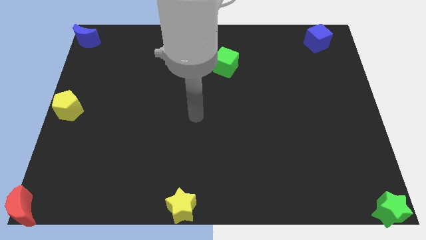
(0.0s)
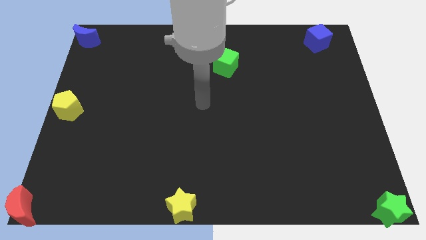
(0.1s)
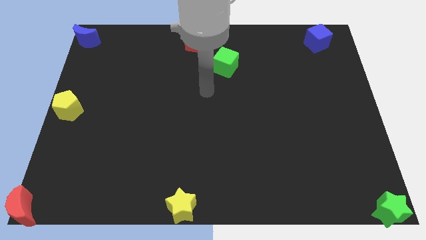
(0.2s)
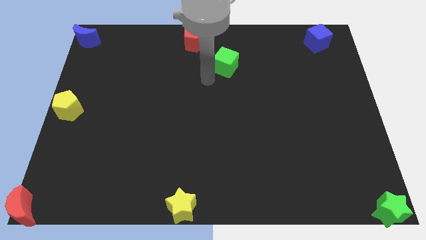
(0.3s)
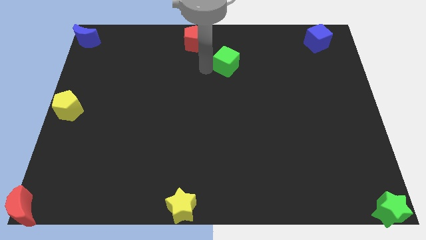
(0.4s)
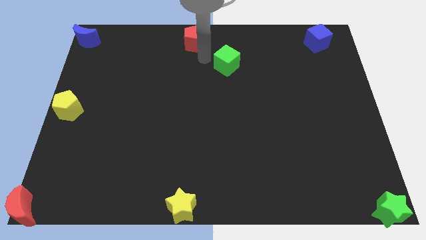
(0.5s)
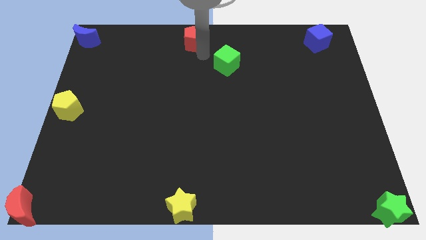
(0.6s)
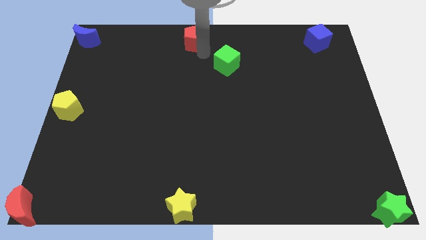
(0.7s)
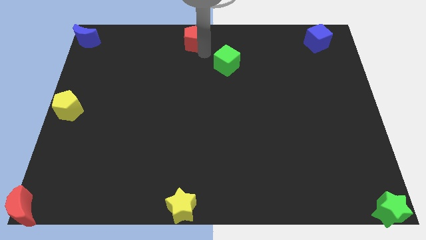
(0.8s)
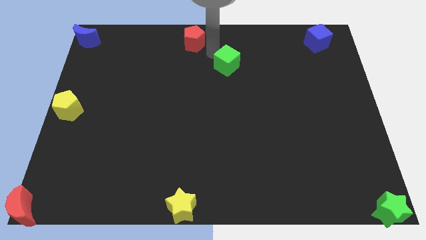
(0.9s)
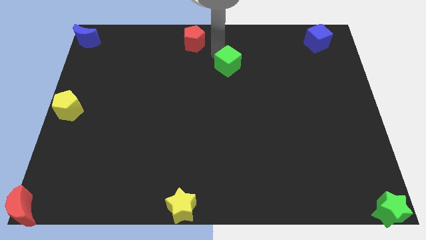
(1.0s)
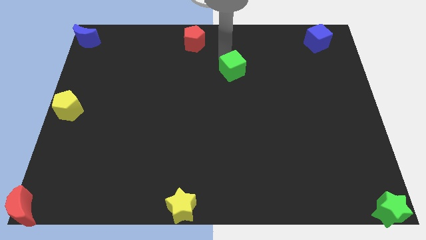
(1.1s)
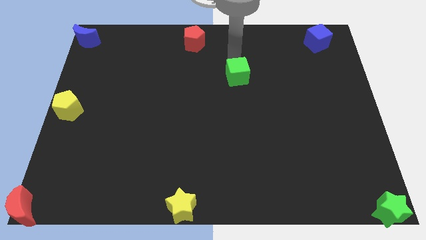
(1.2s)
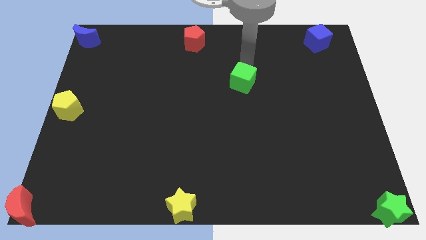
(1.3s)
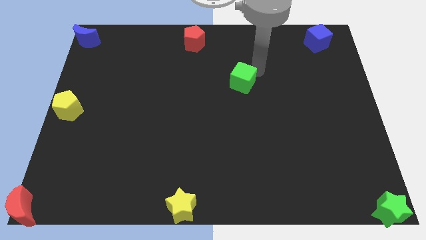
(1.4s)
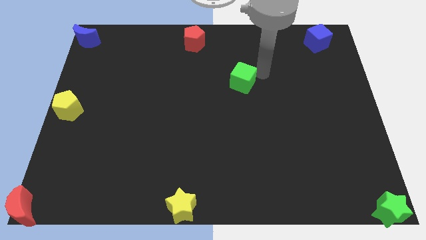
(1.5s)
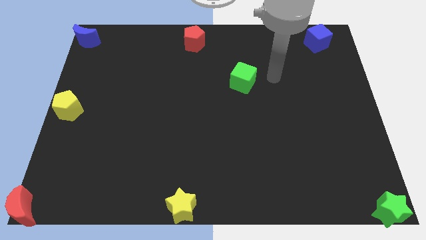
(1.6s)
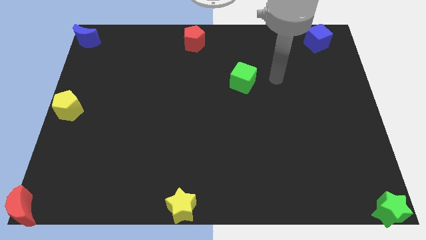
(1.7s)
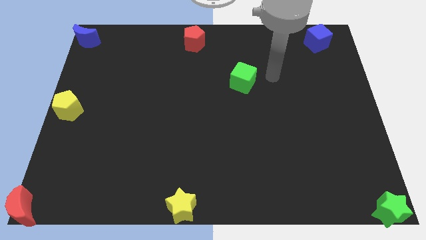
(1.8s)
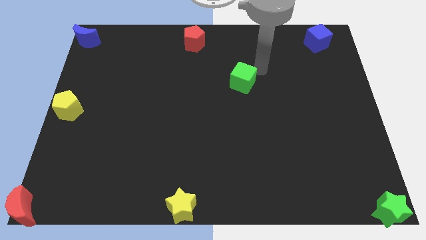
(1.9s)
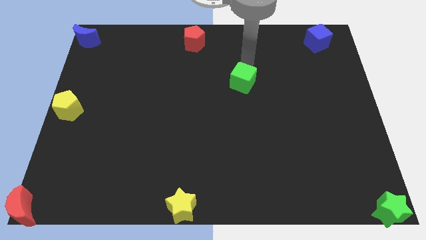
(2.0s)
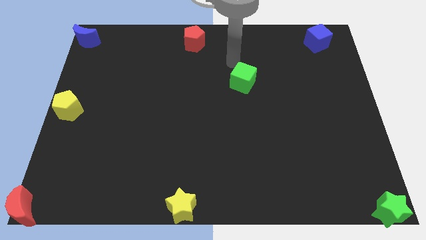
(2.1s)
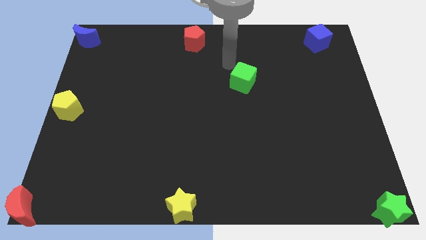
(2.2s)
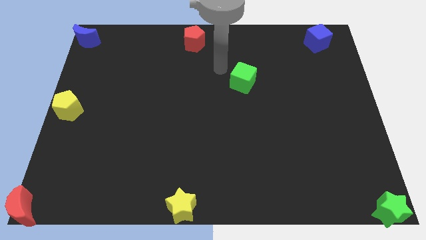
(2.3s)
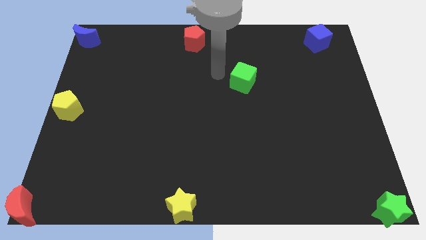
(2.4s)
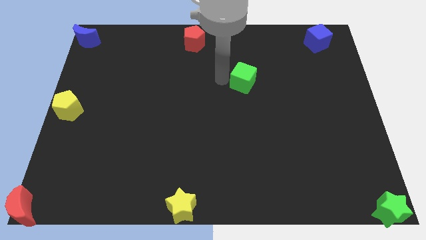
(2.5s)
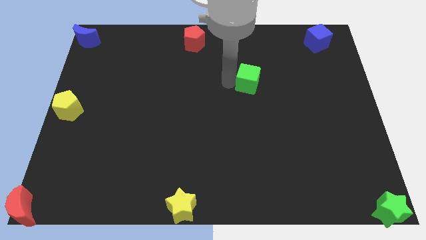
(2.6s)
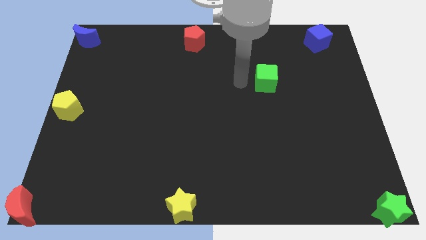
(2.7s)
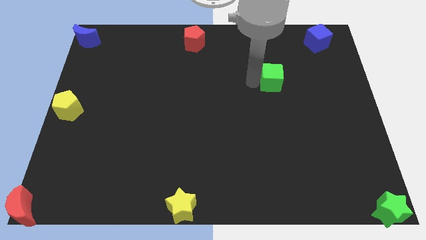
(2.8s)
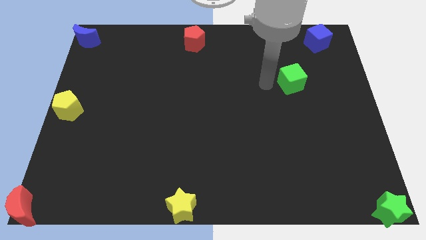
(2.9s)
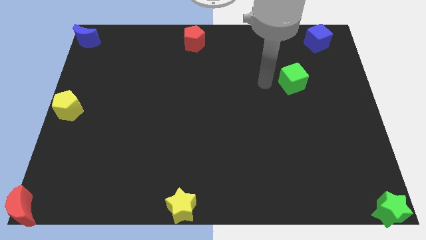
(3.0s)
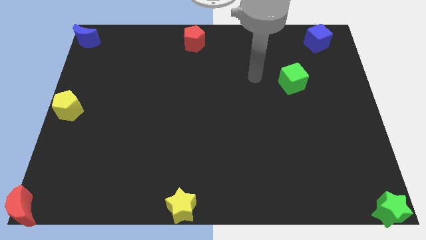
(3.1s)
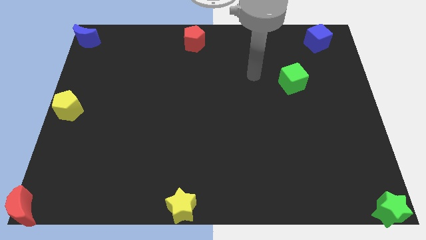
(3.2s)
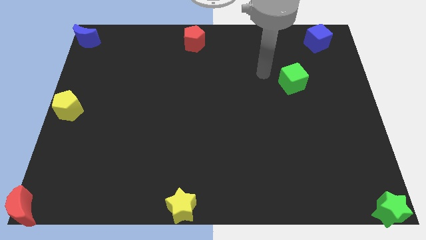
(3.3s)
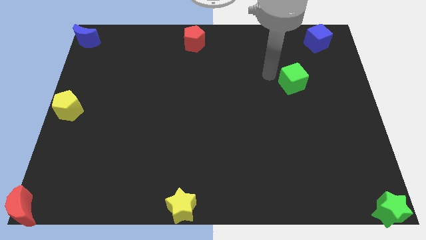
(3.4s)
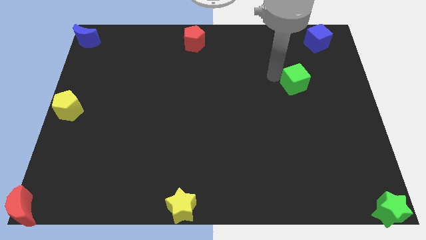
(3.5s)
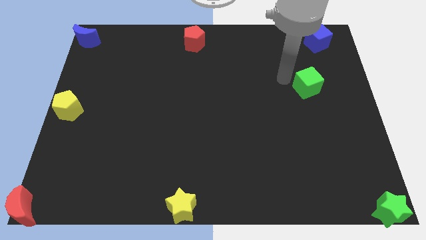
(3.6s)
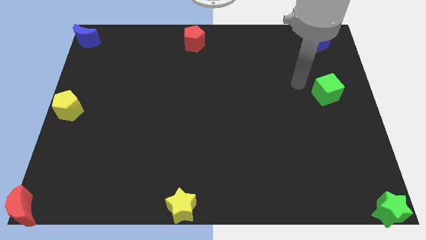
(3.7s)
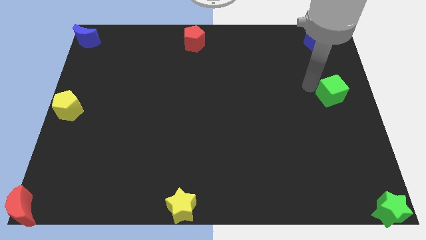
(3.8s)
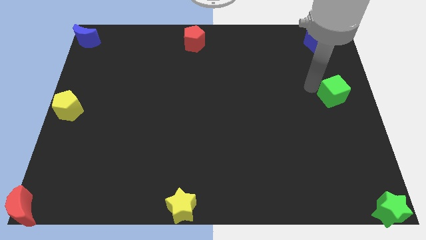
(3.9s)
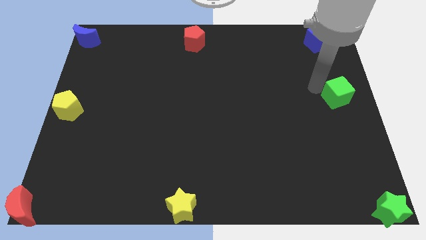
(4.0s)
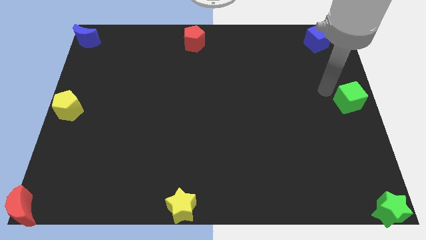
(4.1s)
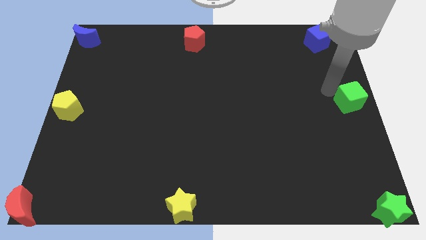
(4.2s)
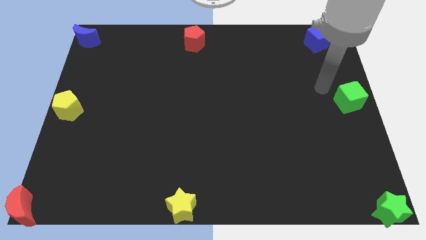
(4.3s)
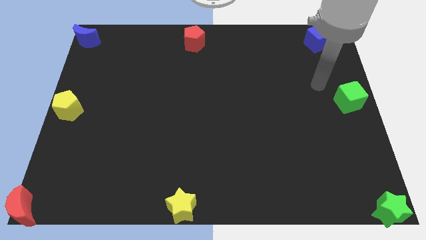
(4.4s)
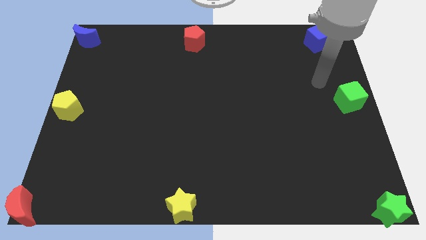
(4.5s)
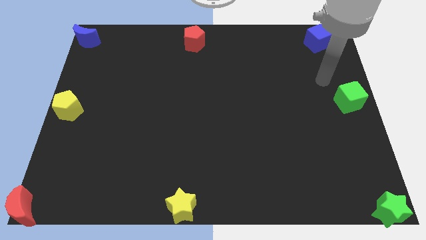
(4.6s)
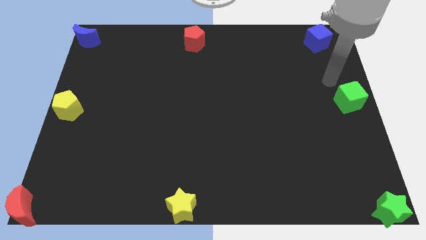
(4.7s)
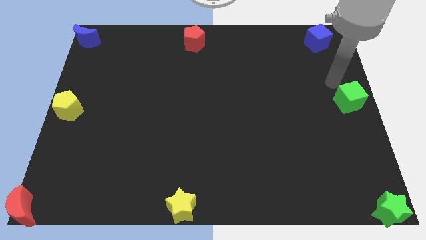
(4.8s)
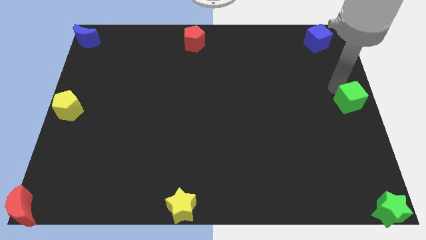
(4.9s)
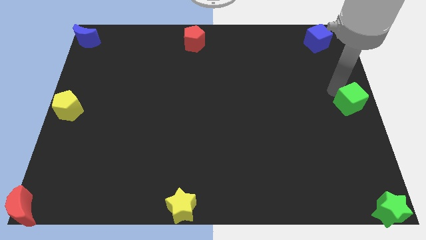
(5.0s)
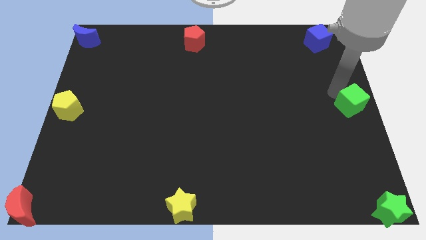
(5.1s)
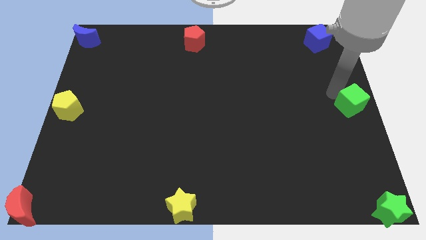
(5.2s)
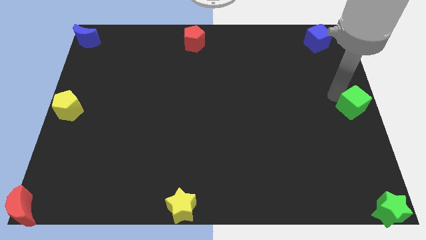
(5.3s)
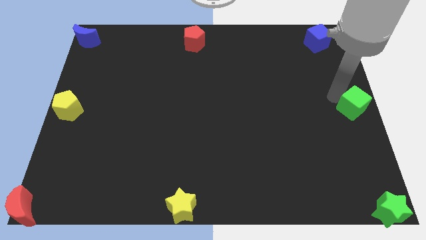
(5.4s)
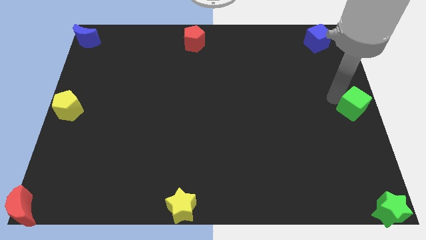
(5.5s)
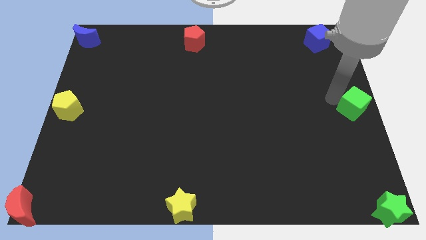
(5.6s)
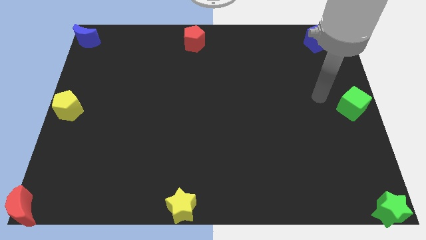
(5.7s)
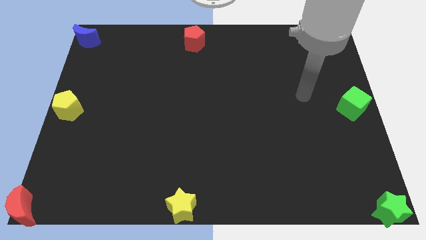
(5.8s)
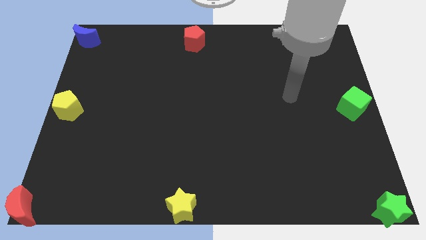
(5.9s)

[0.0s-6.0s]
push the green cube to the right center of the board

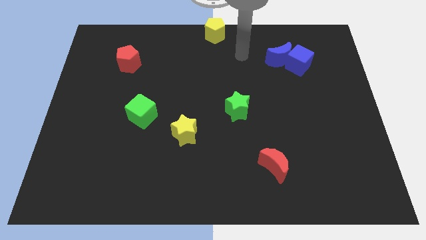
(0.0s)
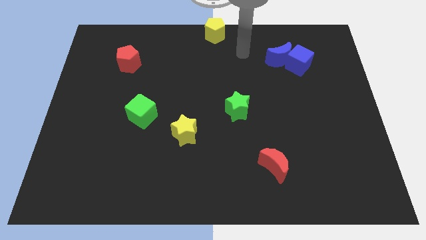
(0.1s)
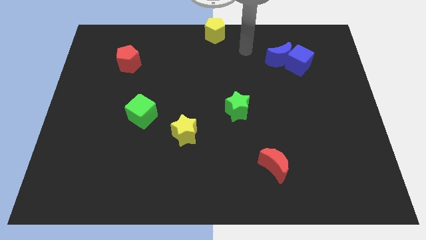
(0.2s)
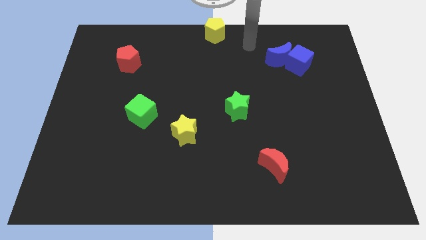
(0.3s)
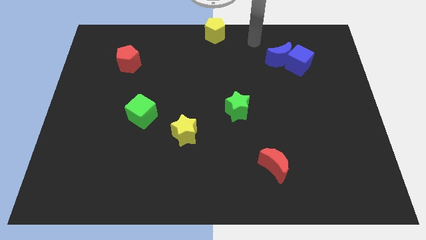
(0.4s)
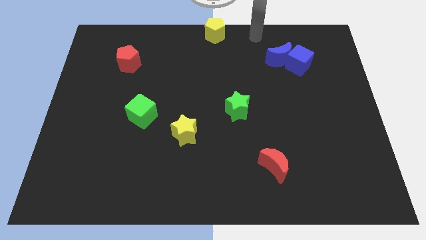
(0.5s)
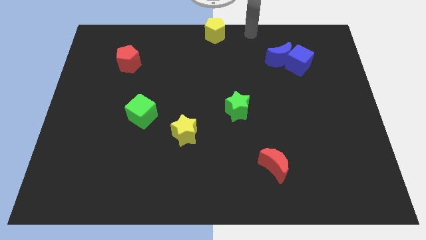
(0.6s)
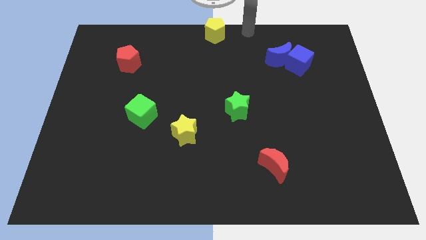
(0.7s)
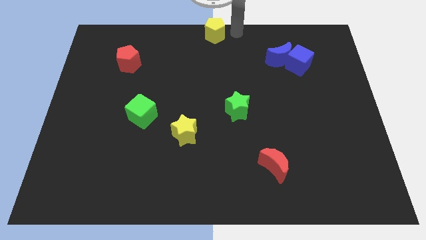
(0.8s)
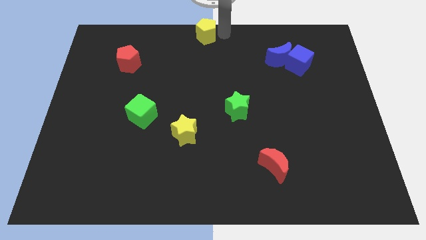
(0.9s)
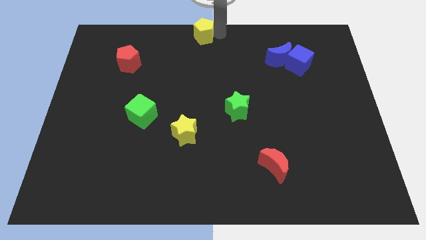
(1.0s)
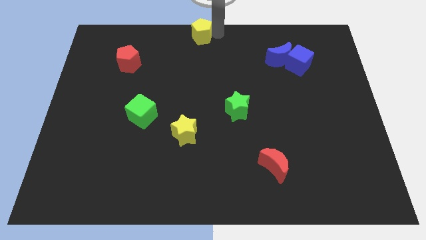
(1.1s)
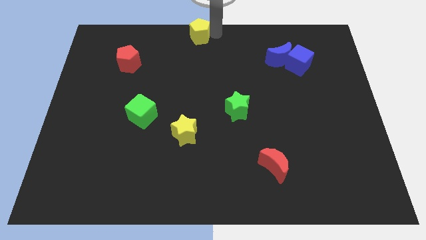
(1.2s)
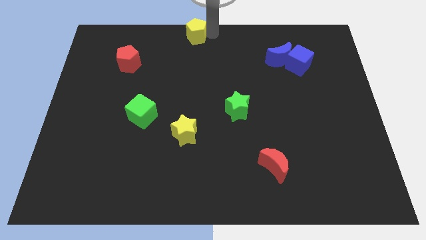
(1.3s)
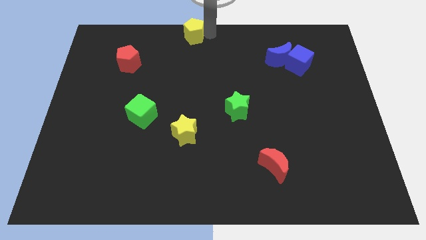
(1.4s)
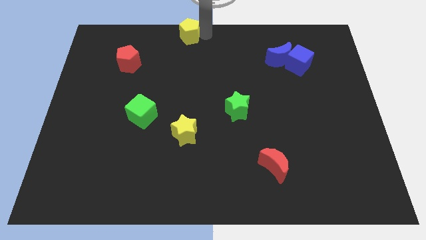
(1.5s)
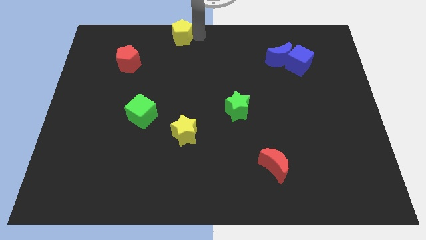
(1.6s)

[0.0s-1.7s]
push yellow pentagon from center to its left

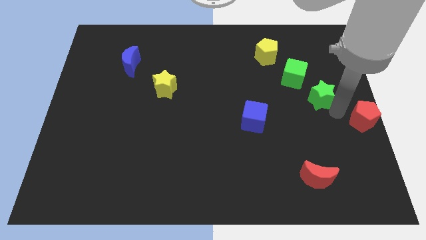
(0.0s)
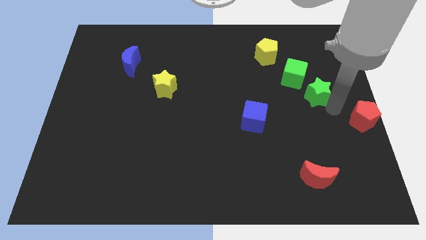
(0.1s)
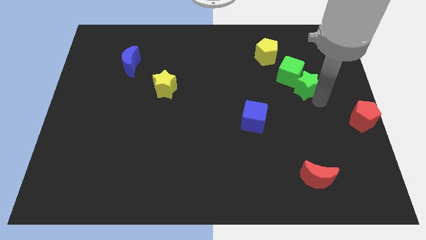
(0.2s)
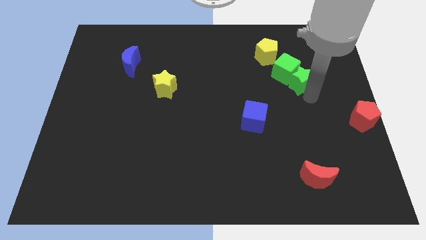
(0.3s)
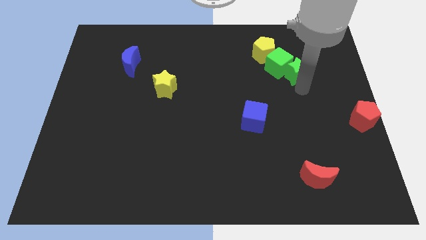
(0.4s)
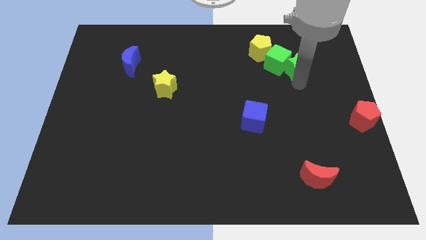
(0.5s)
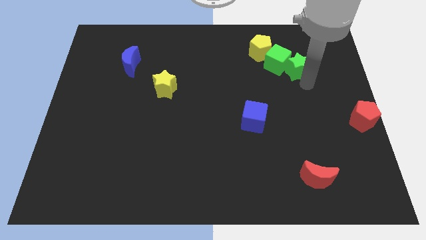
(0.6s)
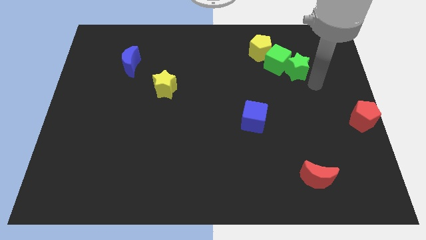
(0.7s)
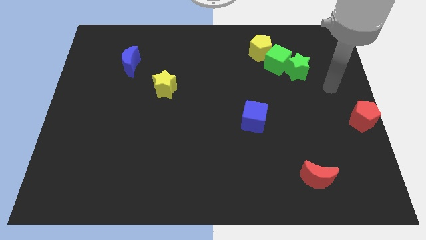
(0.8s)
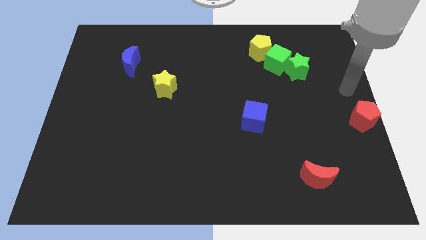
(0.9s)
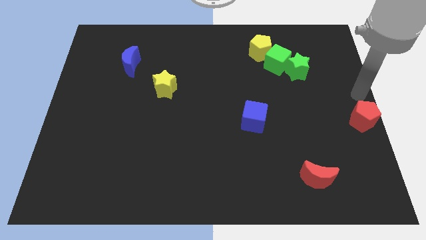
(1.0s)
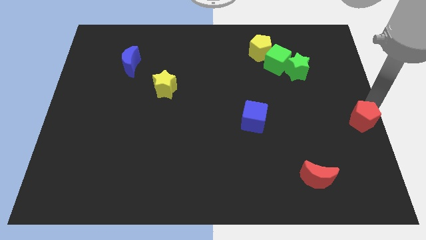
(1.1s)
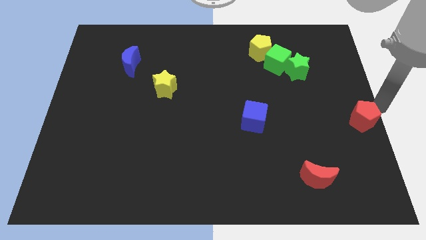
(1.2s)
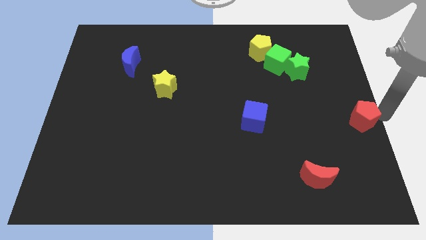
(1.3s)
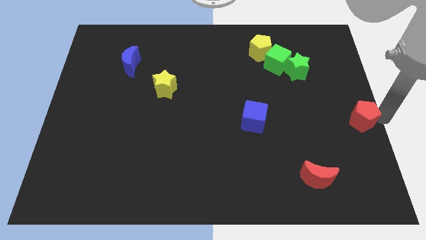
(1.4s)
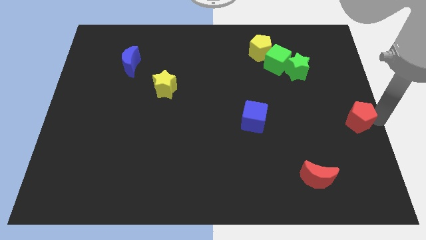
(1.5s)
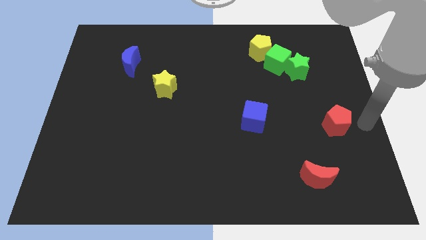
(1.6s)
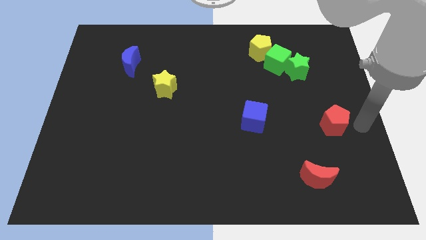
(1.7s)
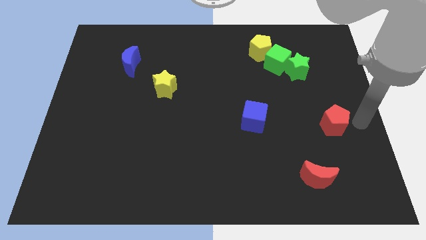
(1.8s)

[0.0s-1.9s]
move the red pentagon to the right side of the blue cube
